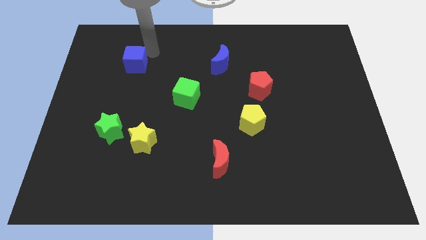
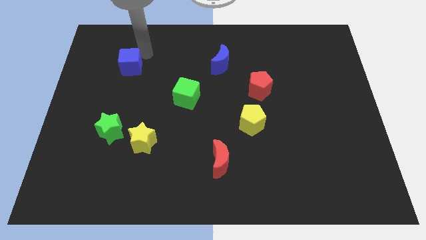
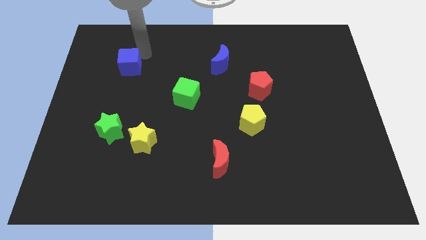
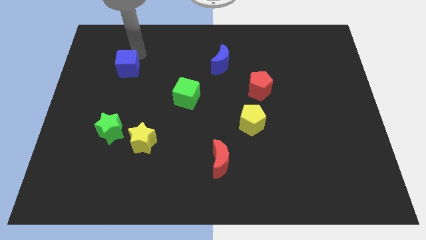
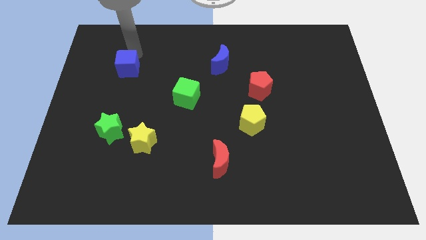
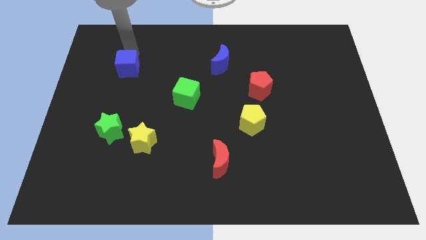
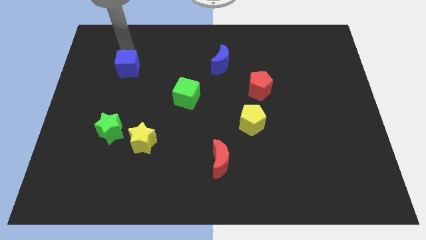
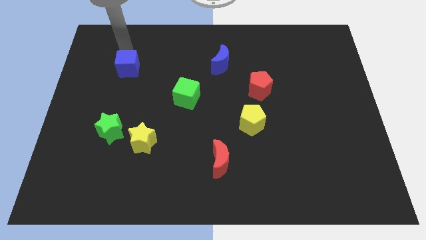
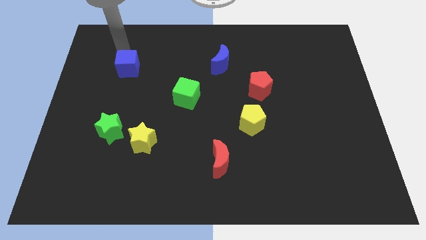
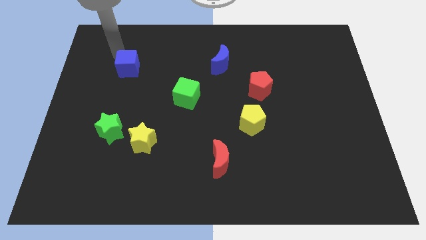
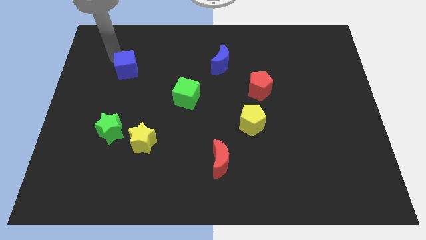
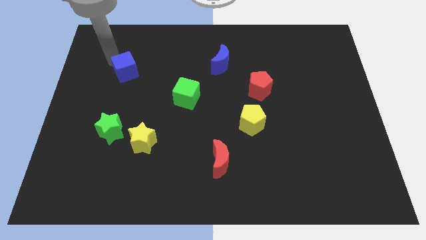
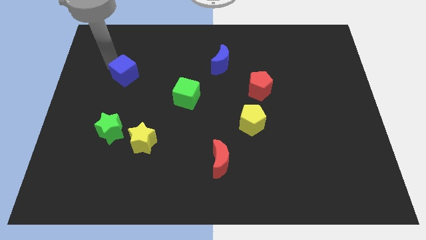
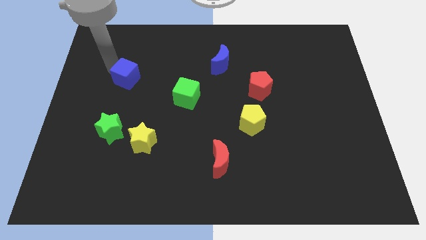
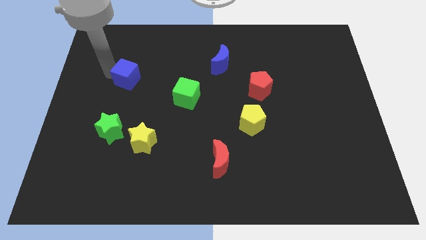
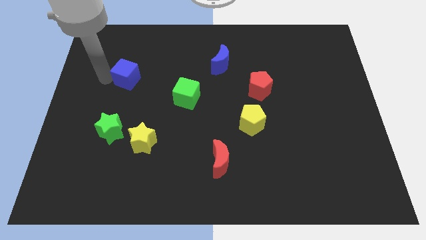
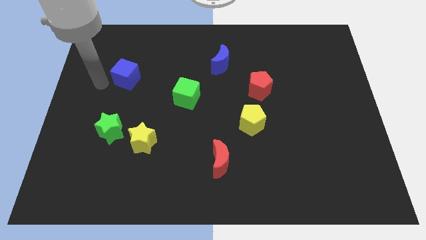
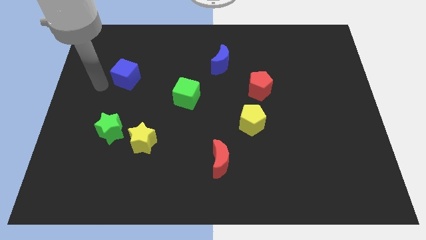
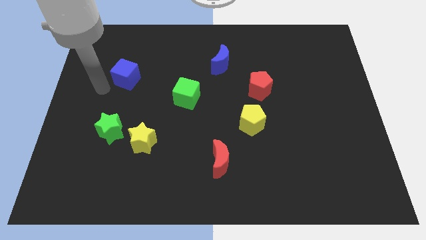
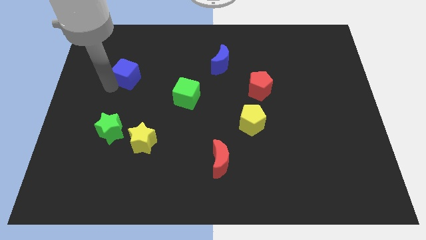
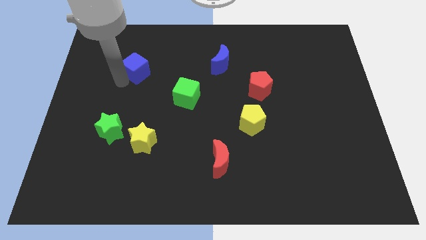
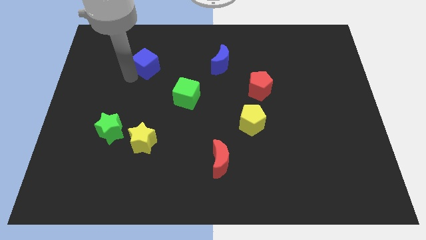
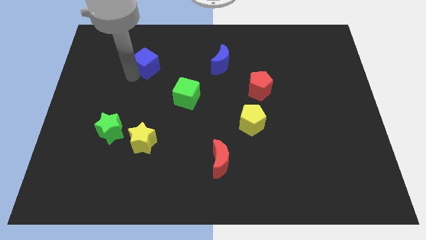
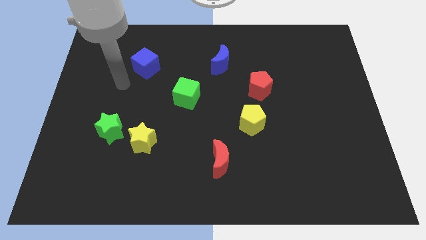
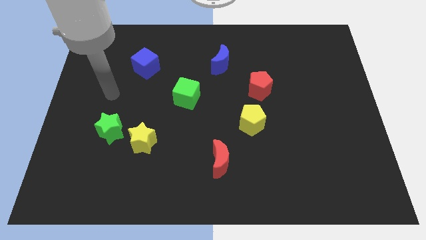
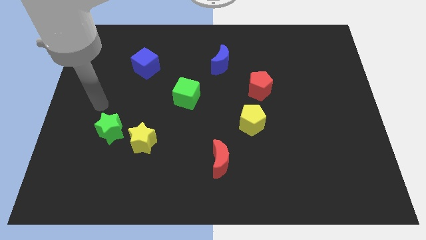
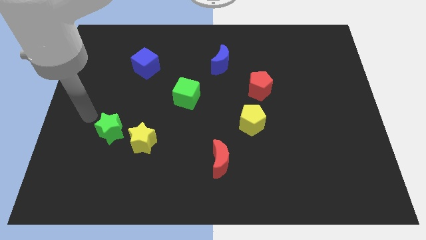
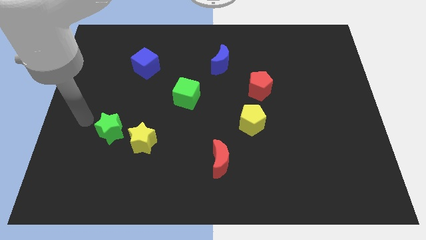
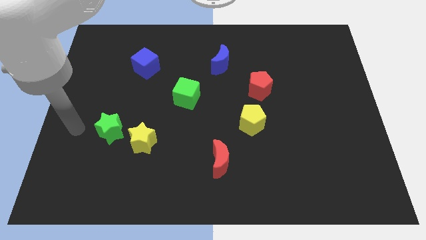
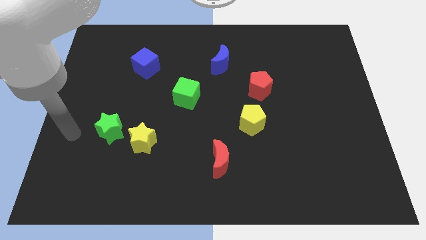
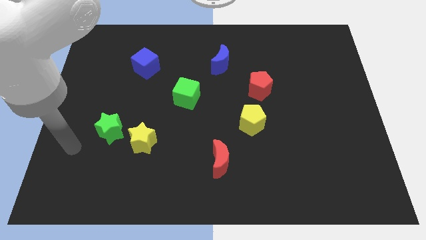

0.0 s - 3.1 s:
push the blue cube diagonally left of the green cube

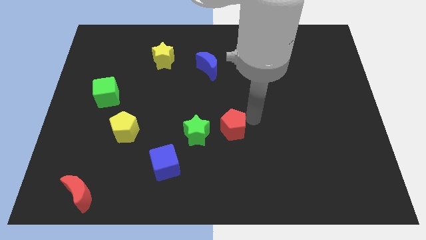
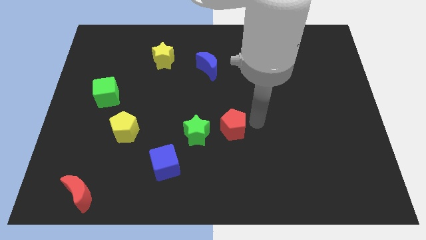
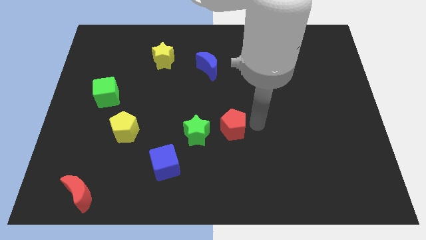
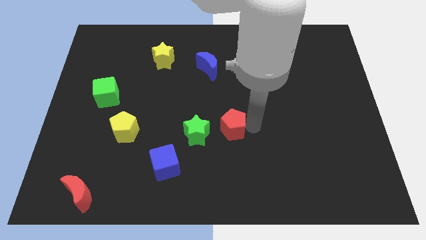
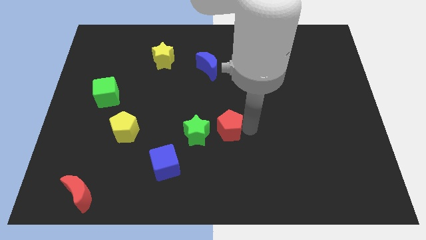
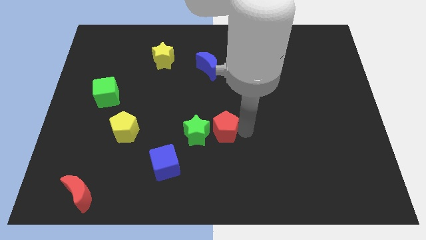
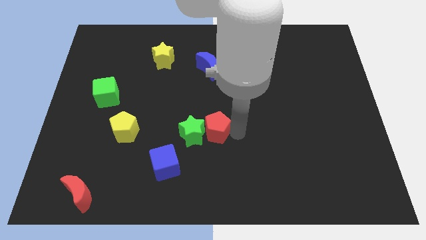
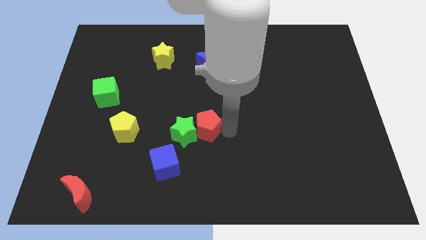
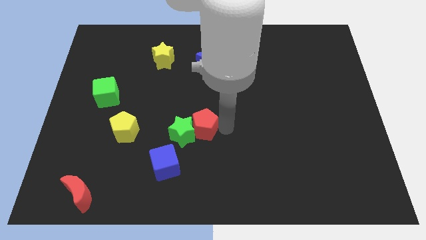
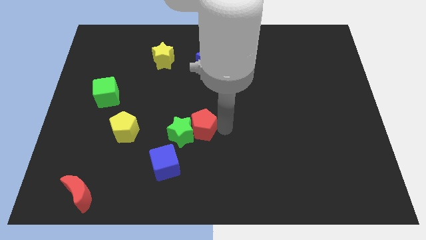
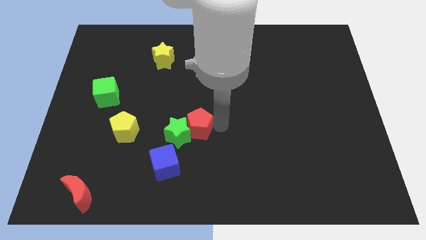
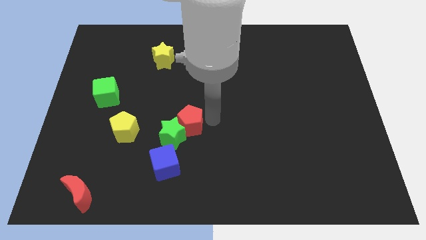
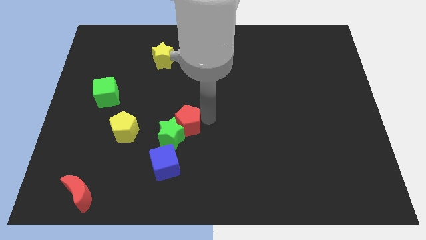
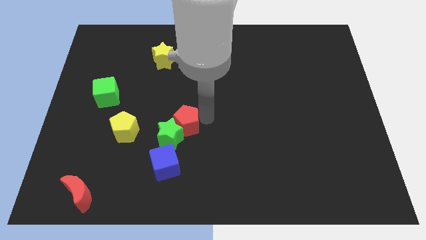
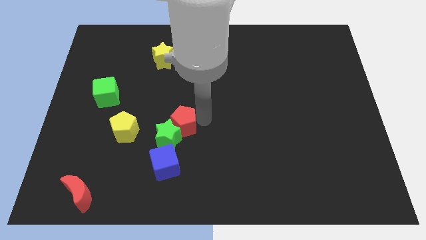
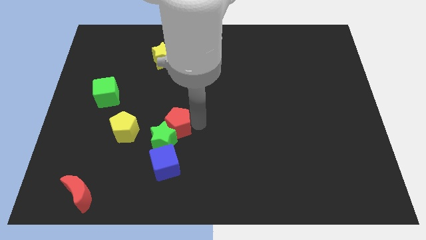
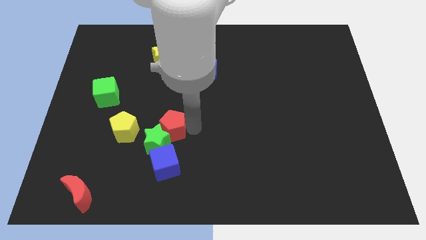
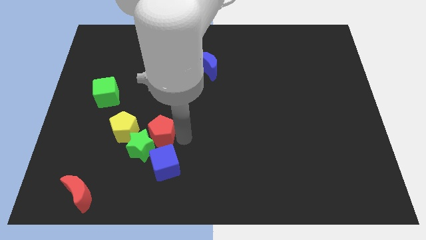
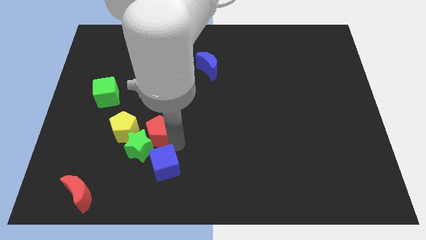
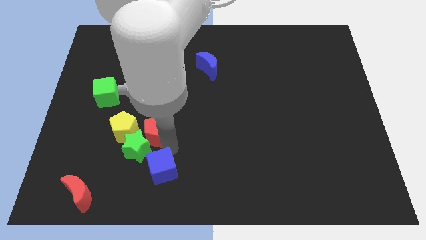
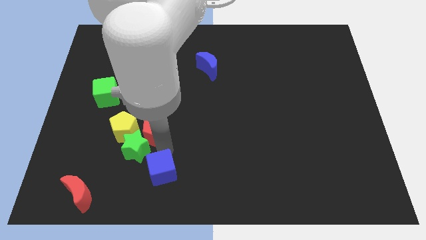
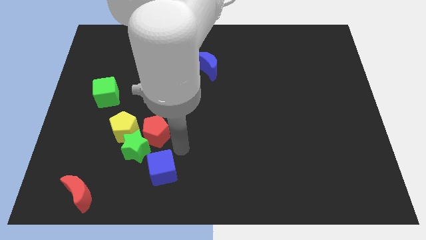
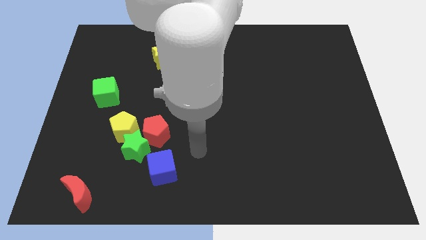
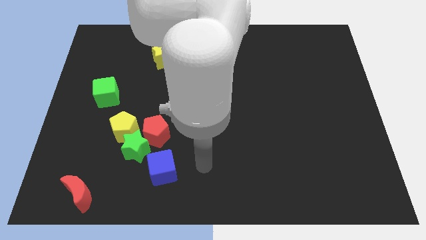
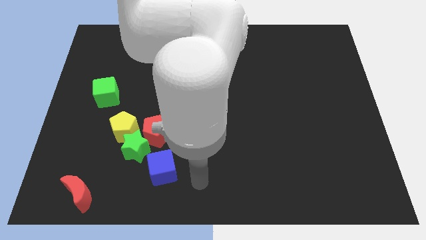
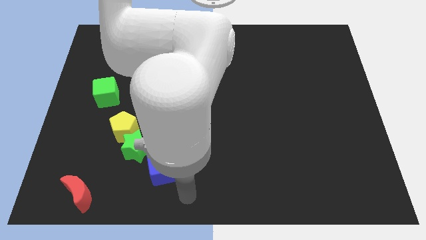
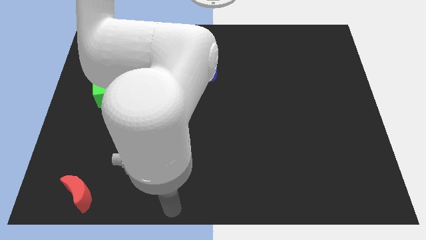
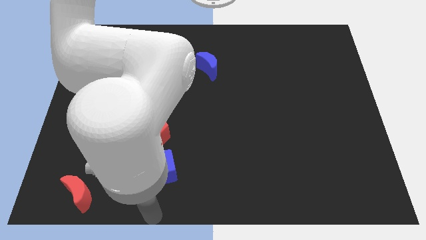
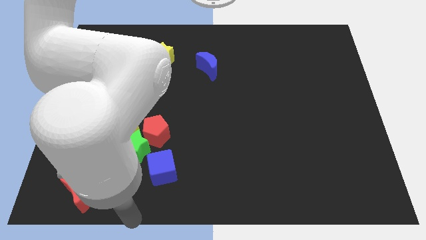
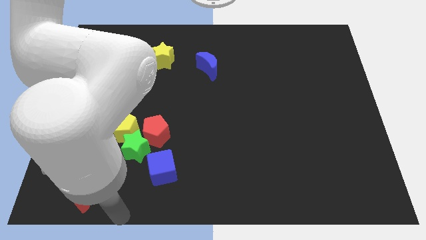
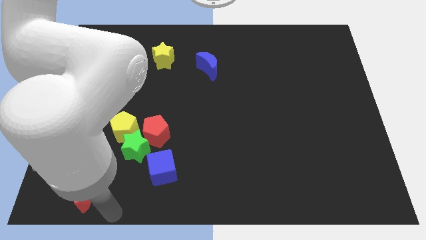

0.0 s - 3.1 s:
place the green star and red pentagon in between the yelllow pentagon and blue cube

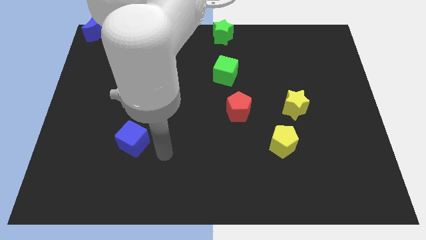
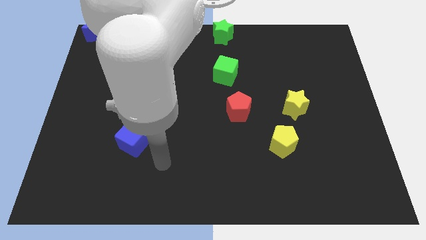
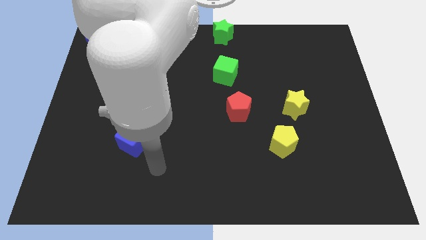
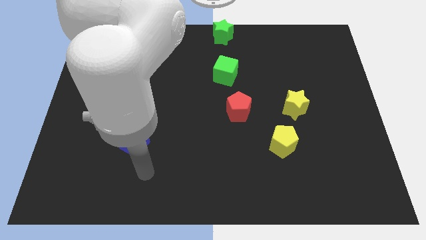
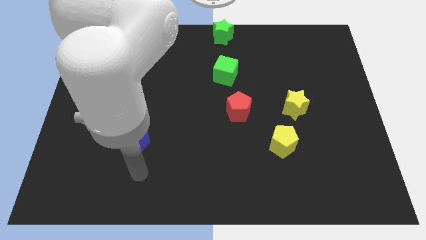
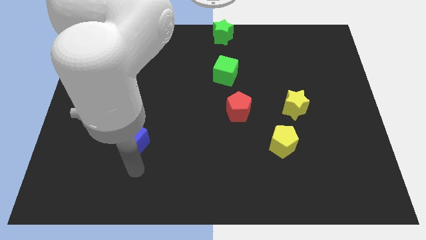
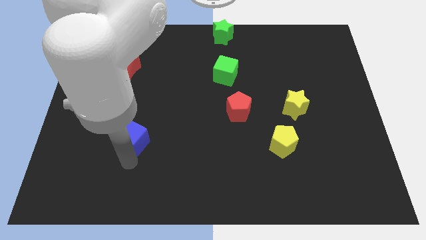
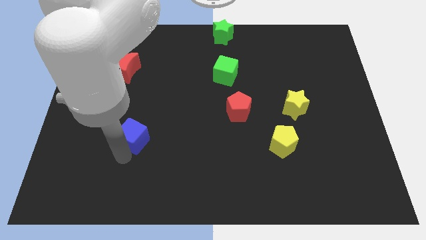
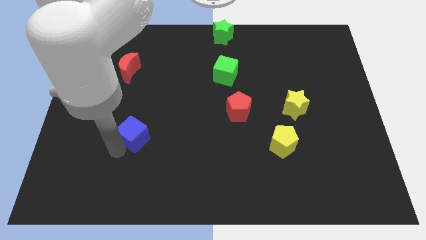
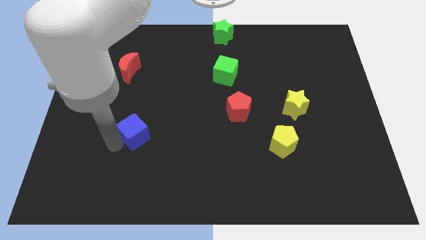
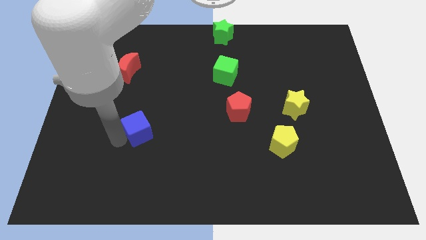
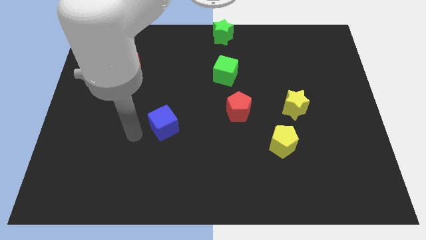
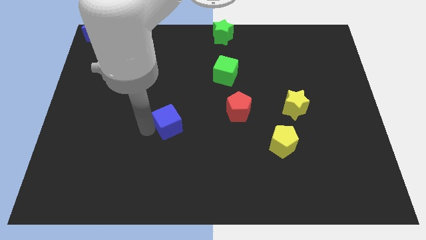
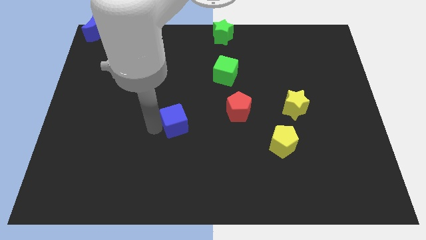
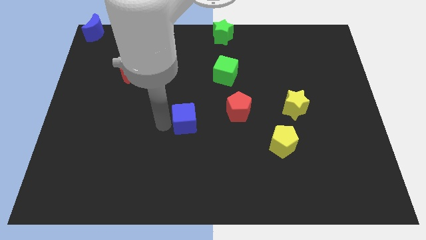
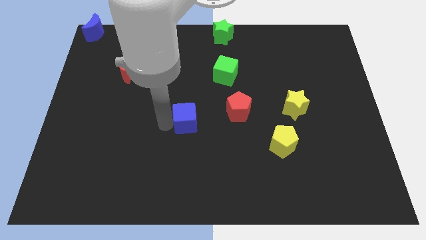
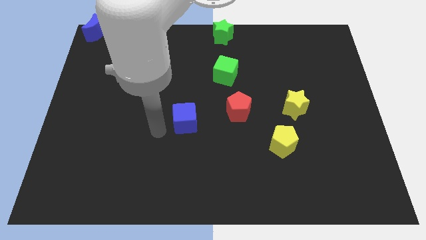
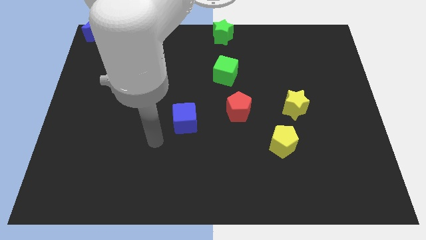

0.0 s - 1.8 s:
move the blue cube to the left of the red pentagon

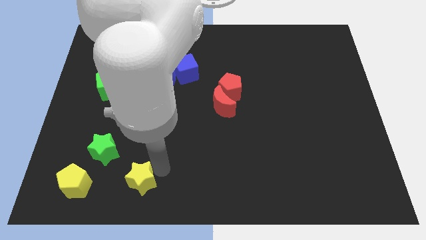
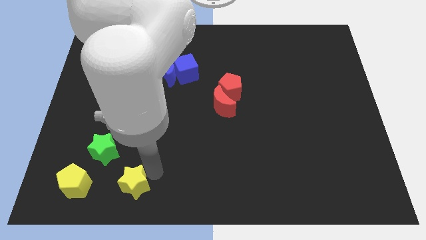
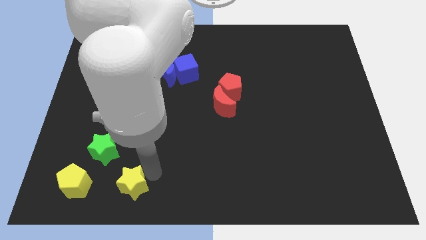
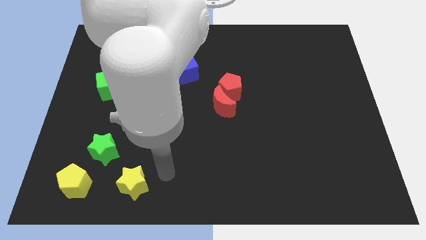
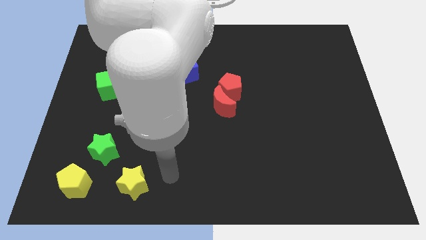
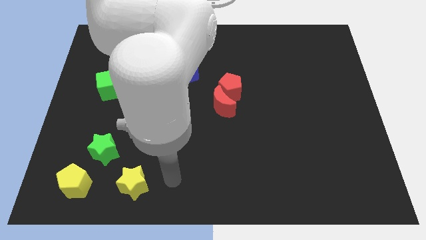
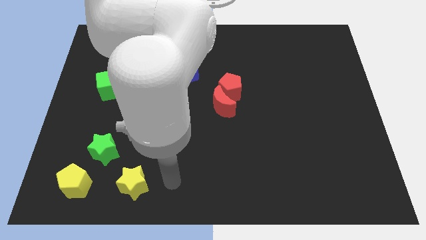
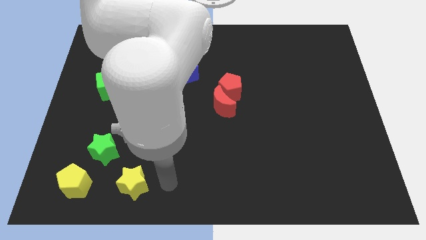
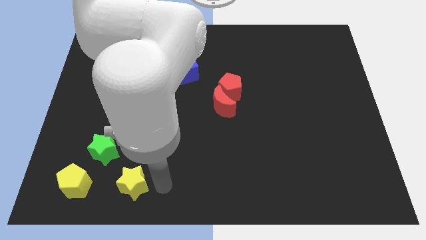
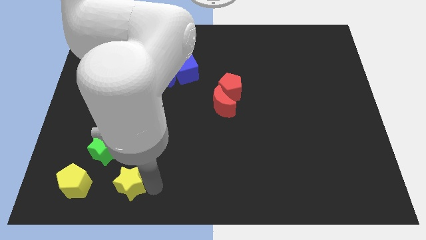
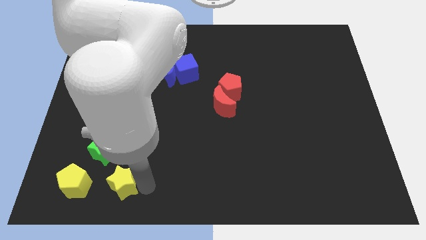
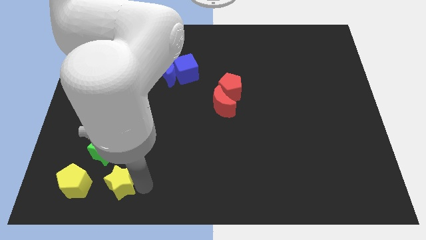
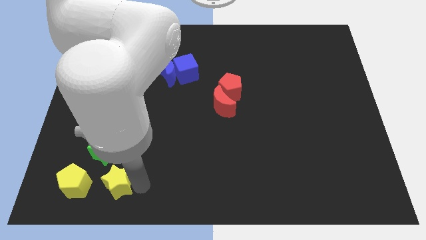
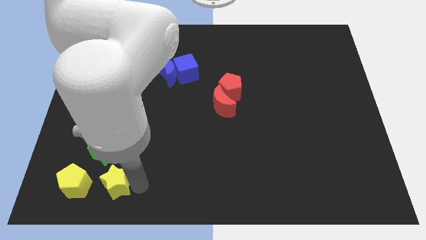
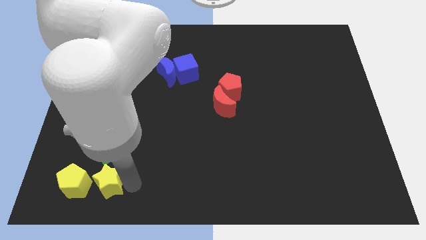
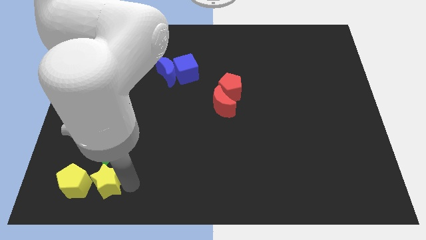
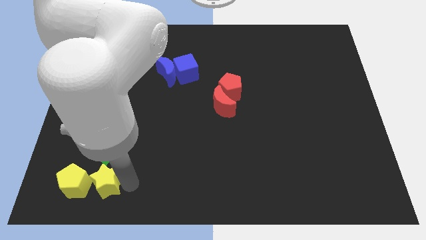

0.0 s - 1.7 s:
push the yellow star right to the yellow pentagon
